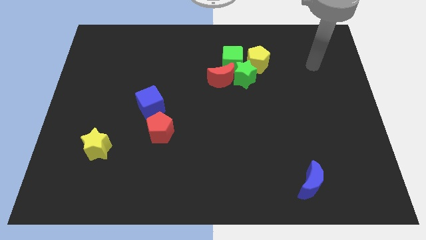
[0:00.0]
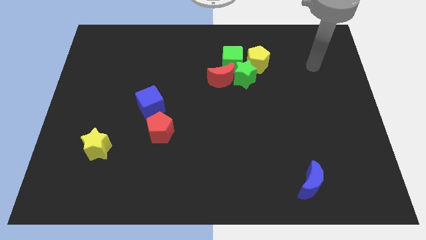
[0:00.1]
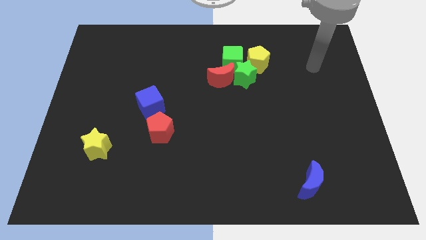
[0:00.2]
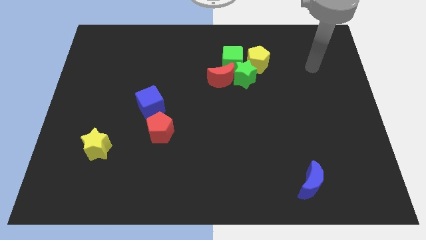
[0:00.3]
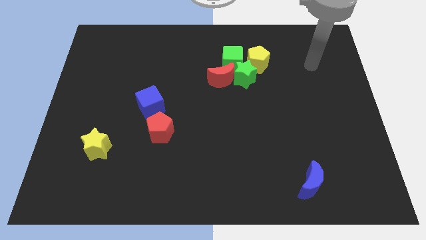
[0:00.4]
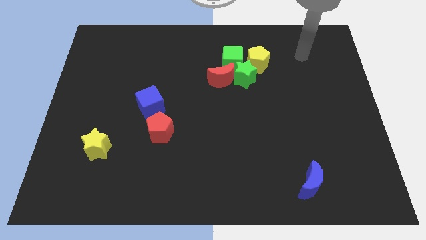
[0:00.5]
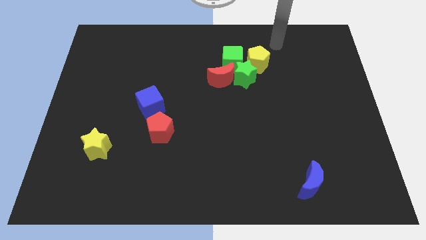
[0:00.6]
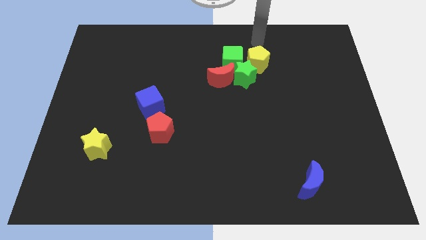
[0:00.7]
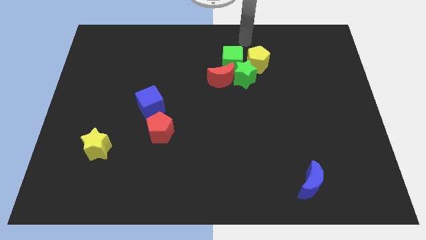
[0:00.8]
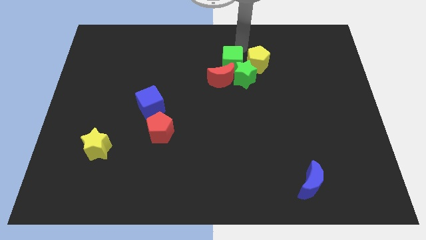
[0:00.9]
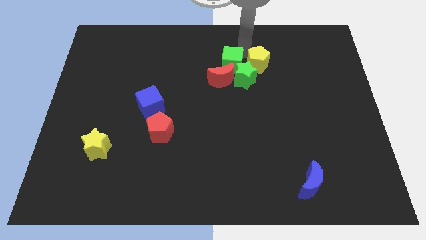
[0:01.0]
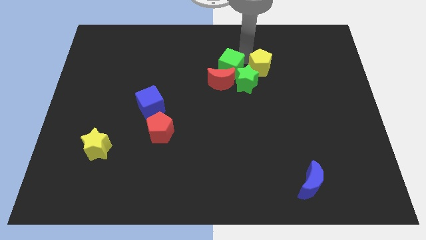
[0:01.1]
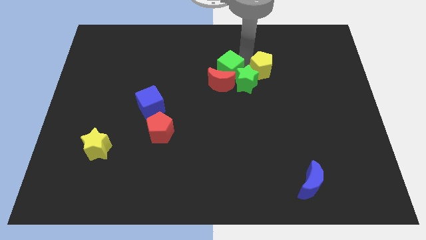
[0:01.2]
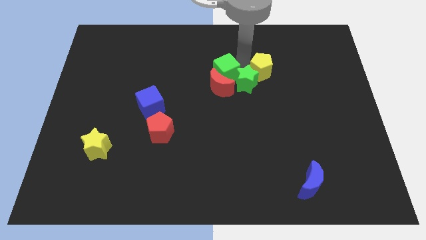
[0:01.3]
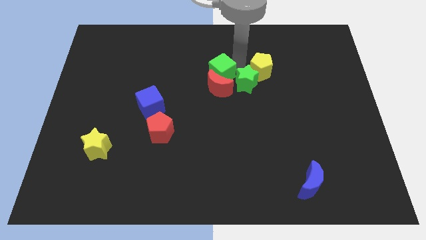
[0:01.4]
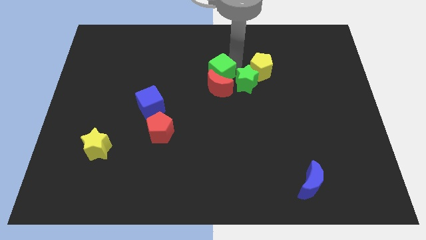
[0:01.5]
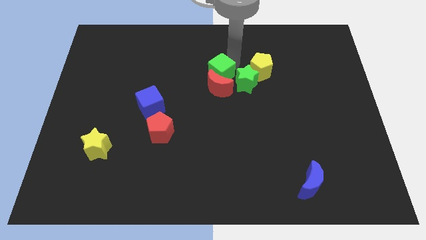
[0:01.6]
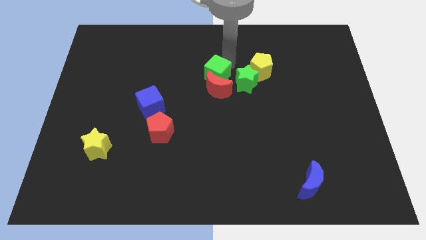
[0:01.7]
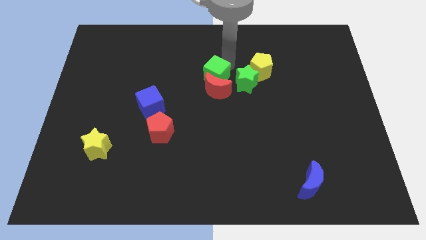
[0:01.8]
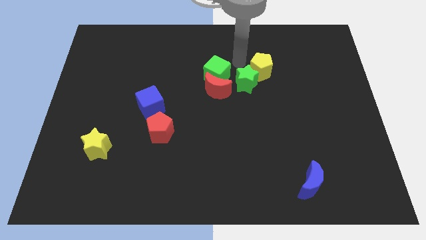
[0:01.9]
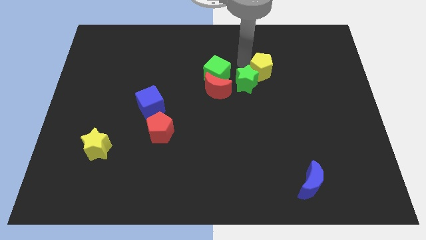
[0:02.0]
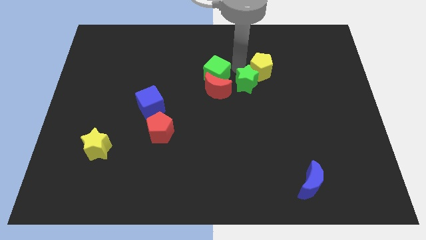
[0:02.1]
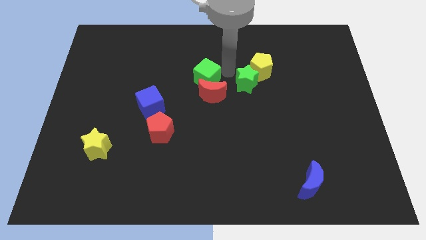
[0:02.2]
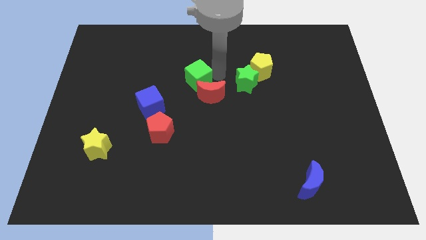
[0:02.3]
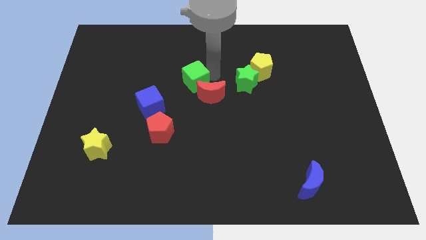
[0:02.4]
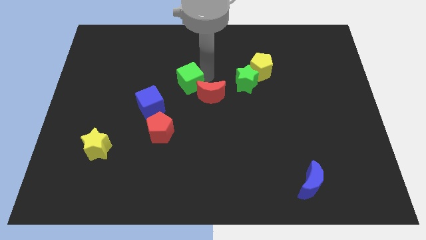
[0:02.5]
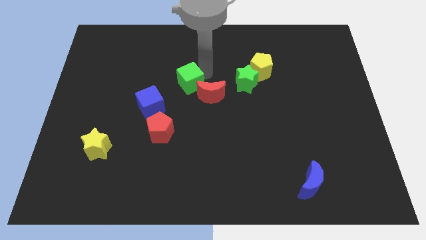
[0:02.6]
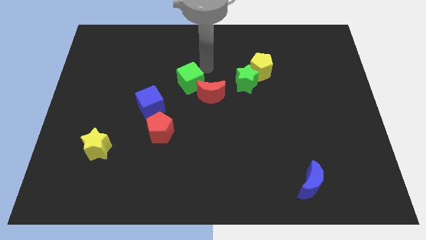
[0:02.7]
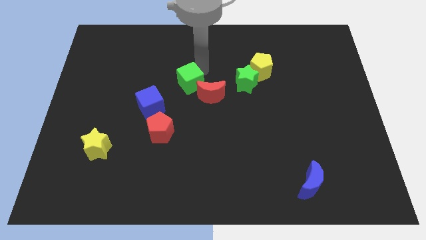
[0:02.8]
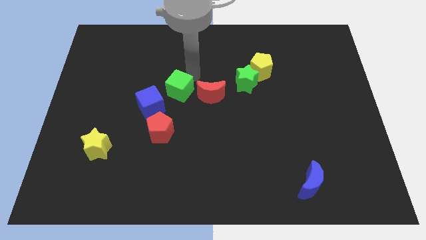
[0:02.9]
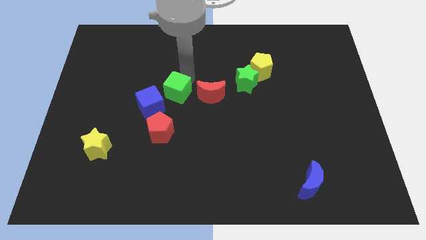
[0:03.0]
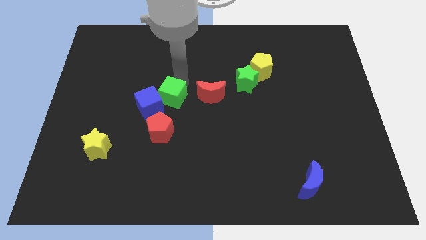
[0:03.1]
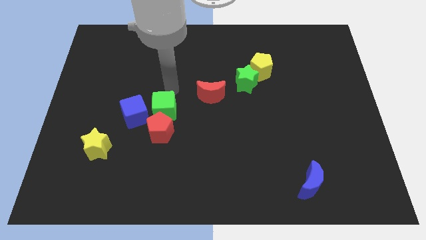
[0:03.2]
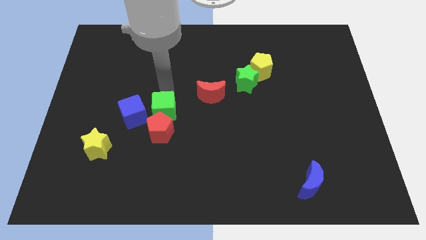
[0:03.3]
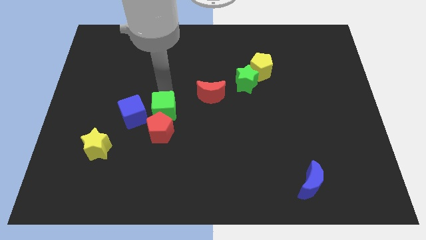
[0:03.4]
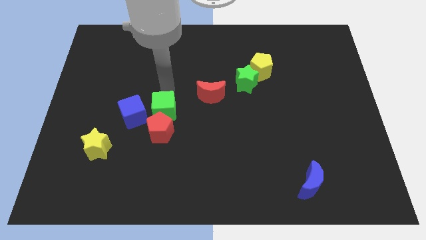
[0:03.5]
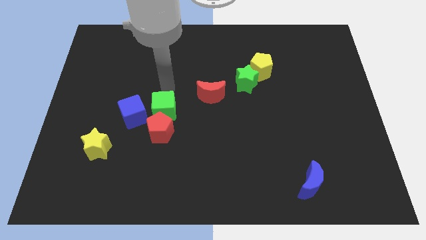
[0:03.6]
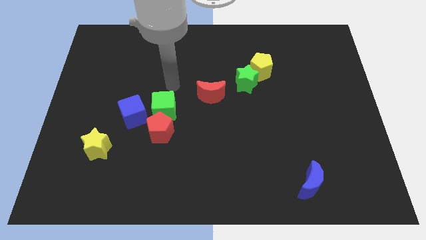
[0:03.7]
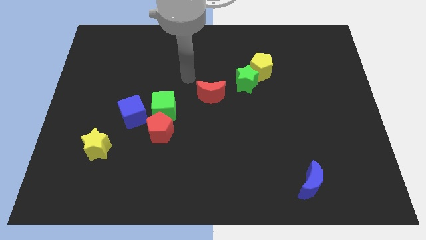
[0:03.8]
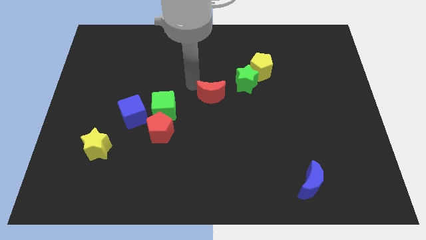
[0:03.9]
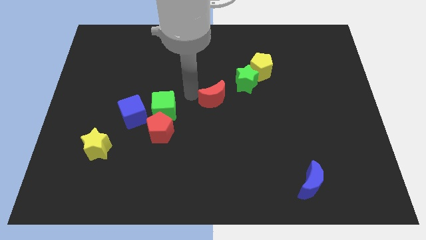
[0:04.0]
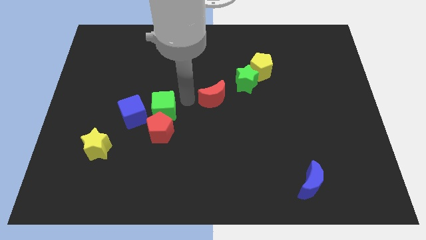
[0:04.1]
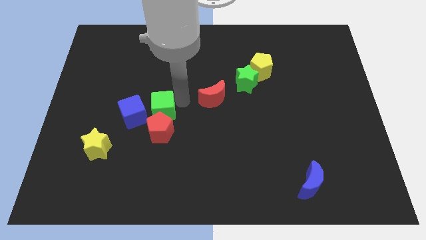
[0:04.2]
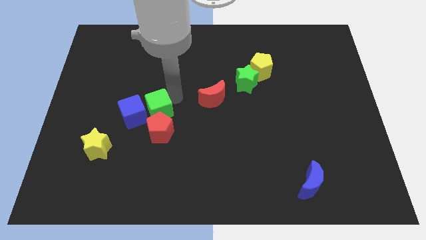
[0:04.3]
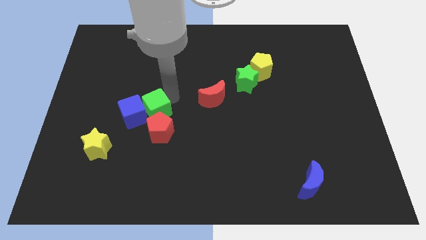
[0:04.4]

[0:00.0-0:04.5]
push the green cube close to the blue cube

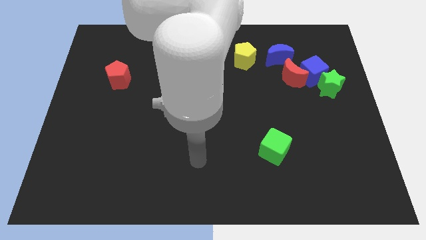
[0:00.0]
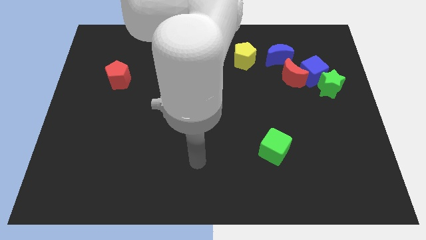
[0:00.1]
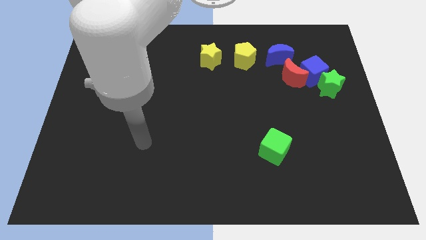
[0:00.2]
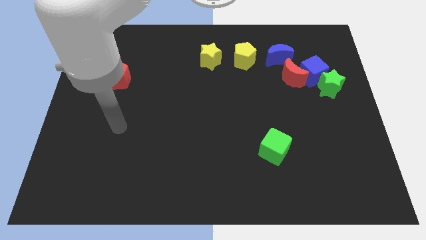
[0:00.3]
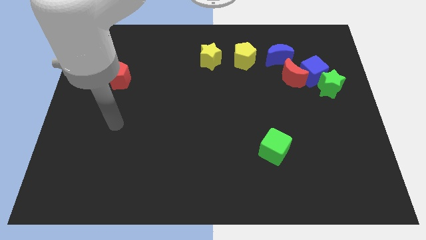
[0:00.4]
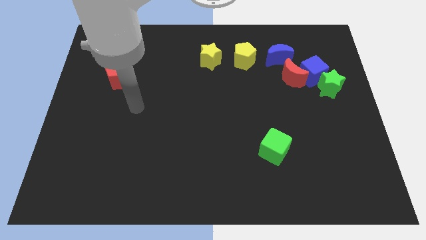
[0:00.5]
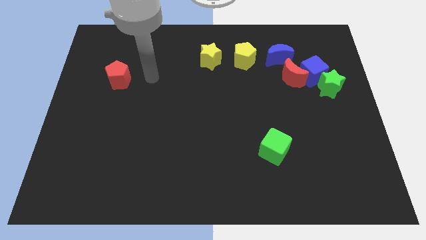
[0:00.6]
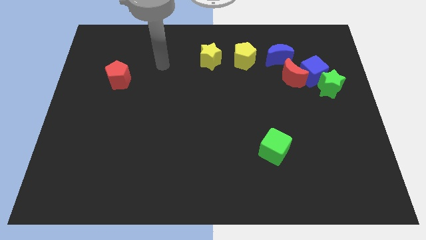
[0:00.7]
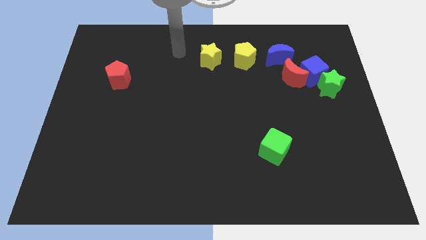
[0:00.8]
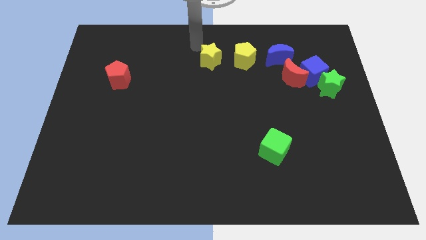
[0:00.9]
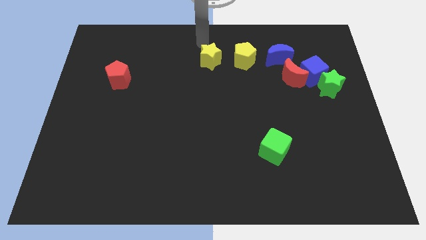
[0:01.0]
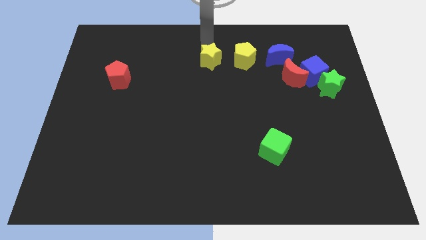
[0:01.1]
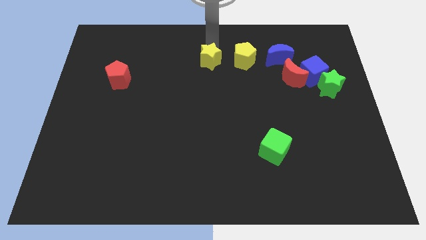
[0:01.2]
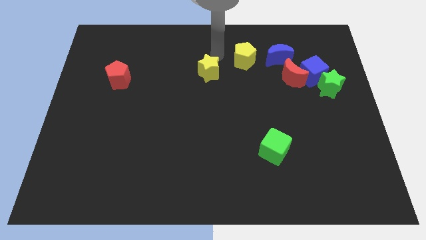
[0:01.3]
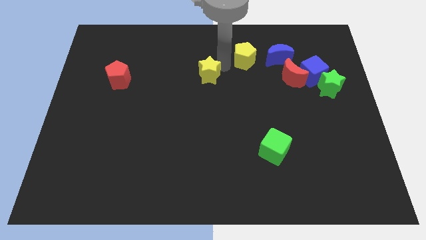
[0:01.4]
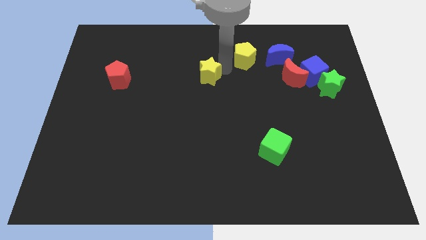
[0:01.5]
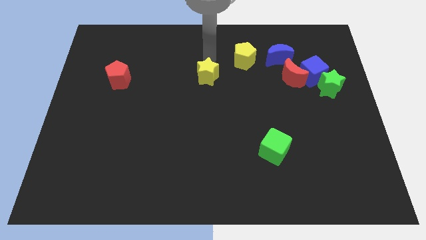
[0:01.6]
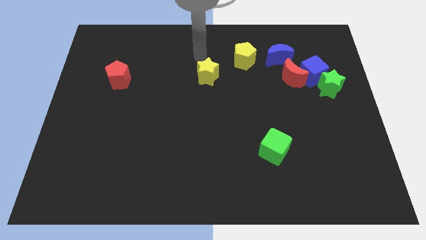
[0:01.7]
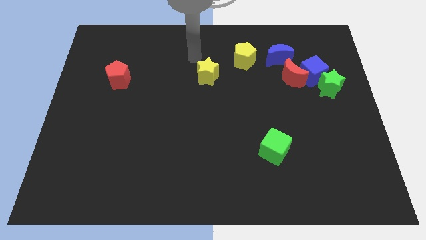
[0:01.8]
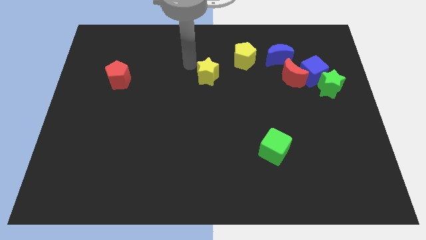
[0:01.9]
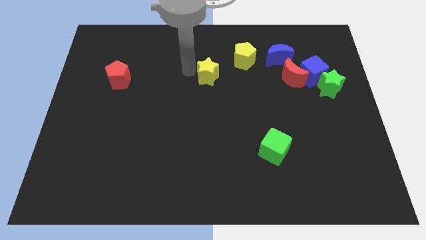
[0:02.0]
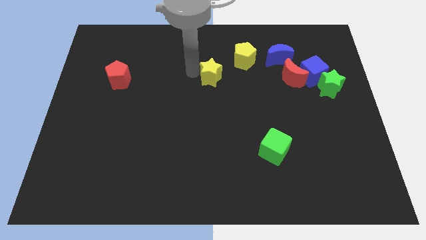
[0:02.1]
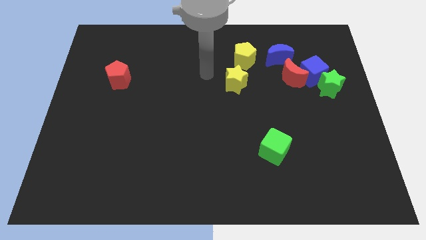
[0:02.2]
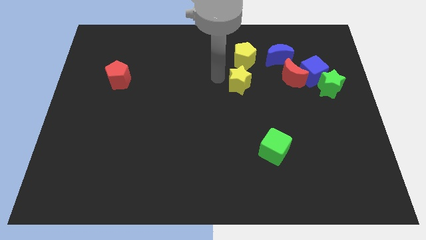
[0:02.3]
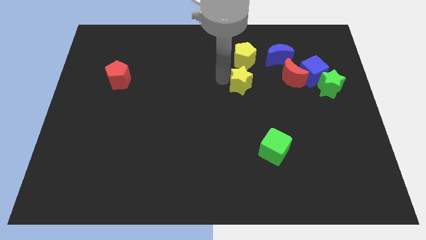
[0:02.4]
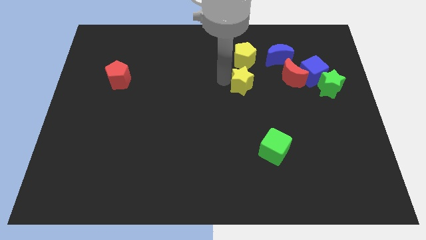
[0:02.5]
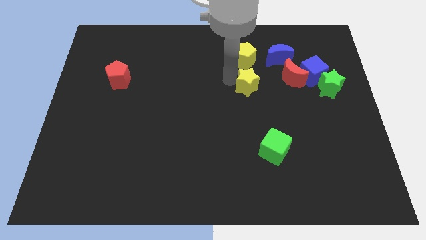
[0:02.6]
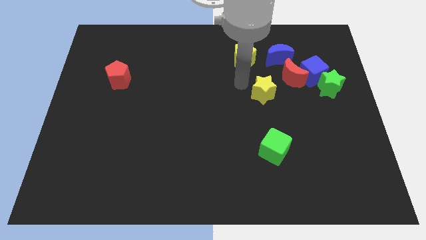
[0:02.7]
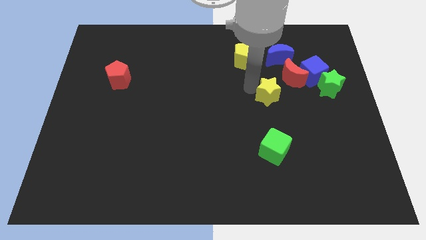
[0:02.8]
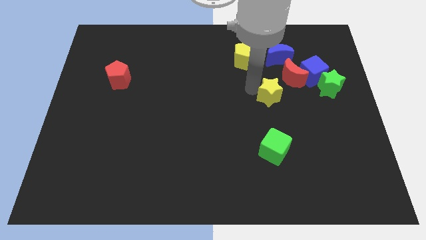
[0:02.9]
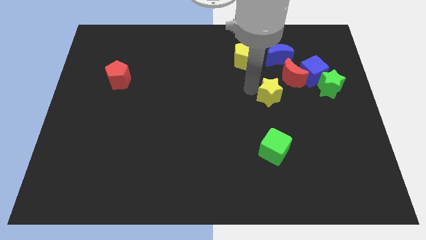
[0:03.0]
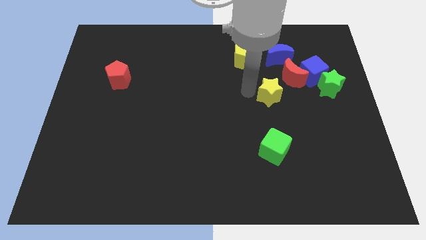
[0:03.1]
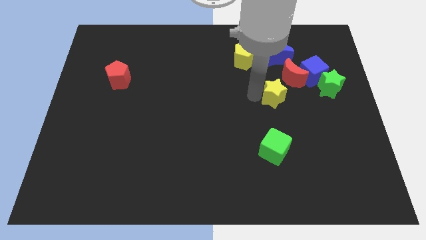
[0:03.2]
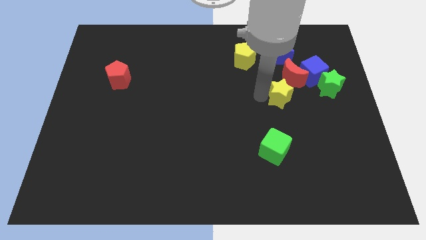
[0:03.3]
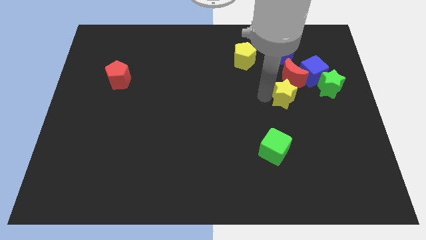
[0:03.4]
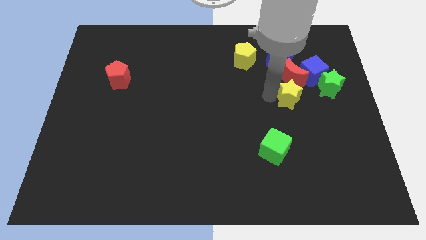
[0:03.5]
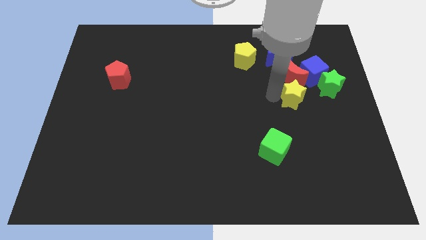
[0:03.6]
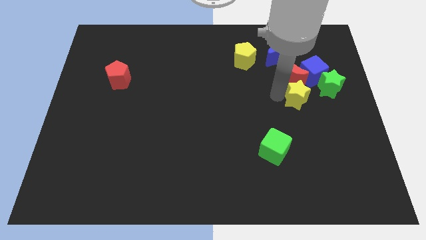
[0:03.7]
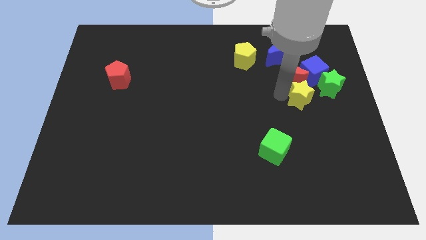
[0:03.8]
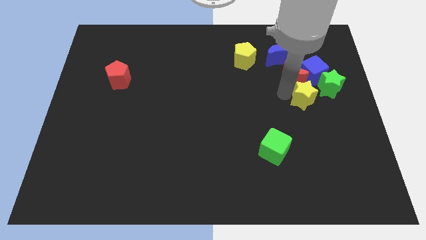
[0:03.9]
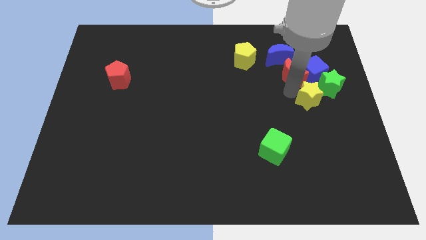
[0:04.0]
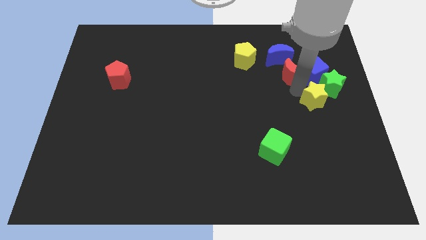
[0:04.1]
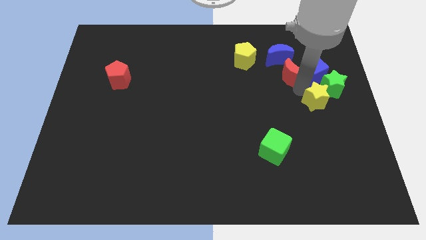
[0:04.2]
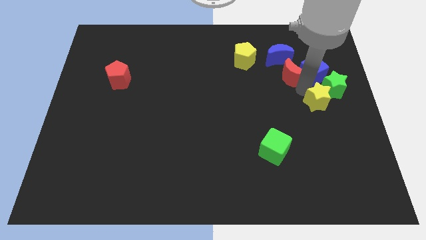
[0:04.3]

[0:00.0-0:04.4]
push the yellow star next to the green star
